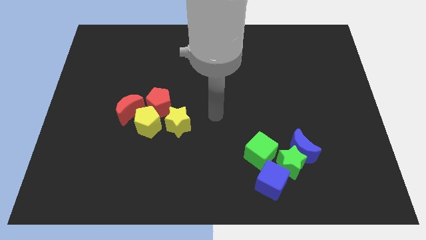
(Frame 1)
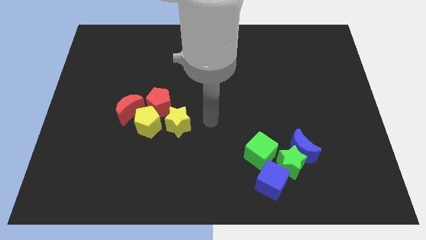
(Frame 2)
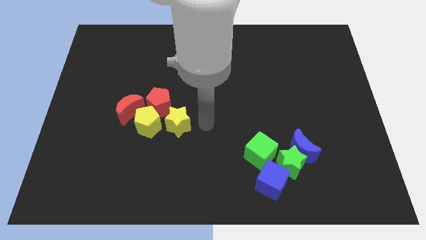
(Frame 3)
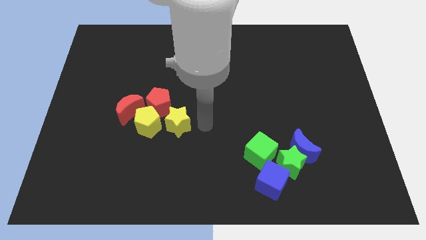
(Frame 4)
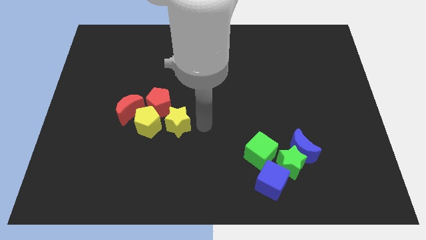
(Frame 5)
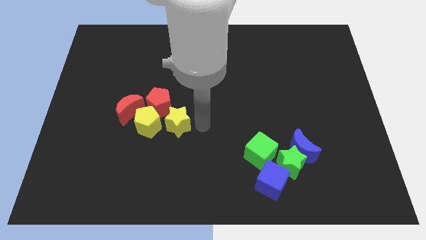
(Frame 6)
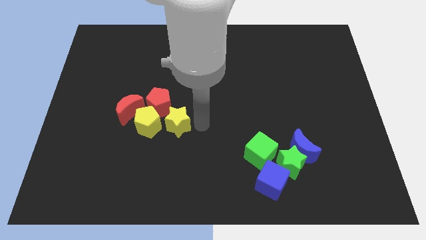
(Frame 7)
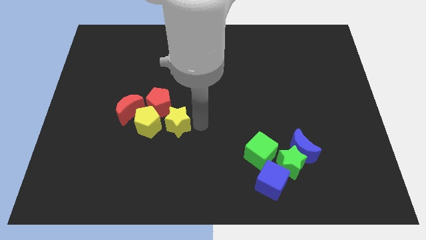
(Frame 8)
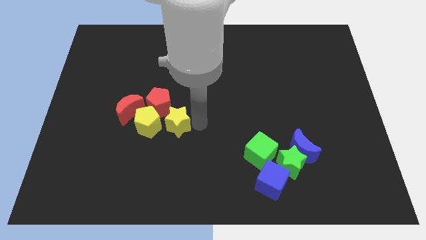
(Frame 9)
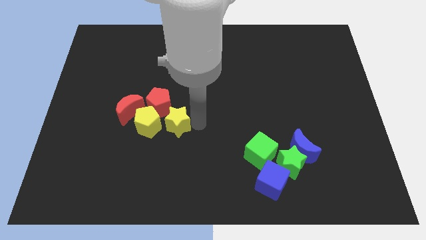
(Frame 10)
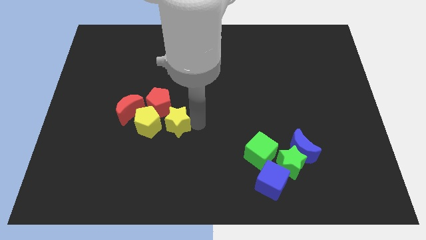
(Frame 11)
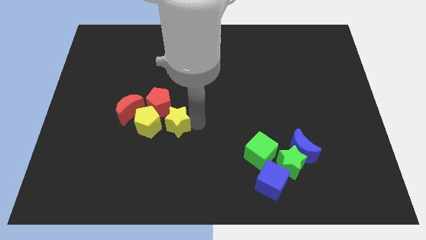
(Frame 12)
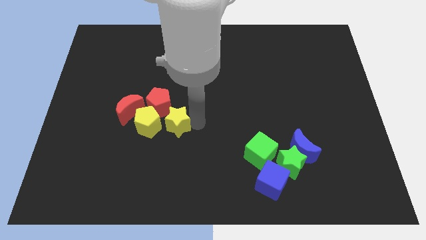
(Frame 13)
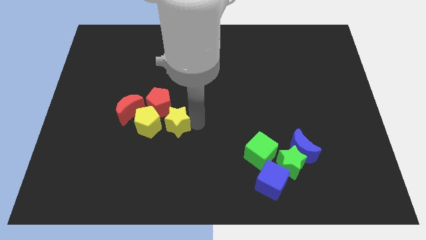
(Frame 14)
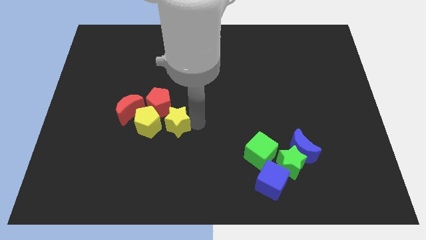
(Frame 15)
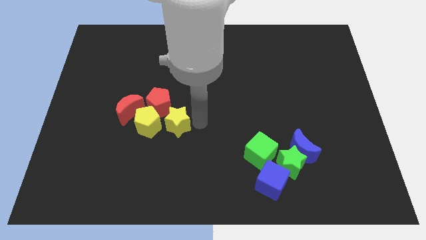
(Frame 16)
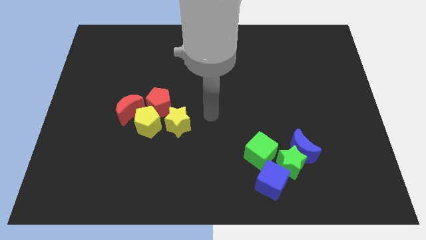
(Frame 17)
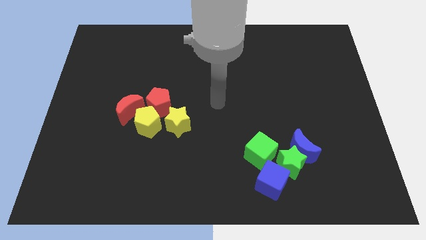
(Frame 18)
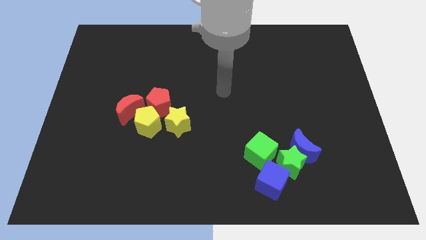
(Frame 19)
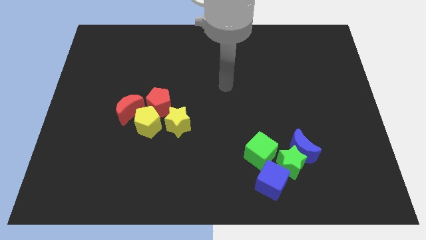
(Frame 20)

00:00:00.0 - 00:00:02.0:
move the arm away from the yellow star

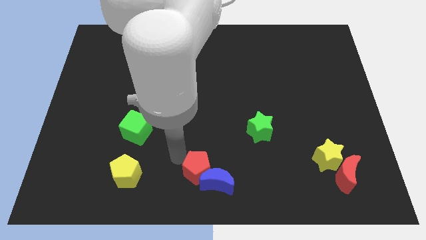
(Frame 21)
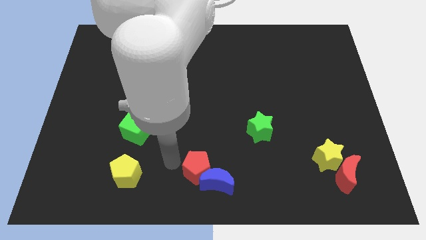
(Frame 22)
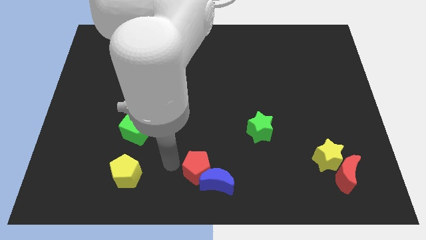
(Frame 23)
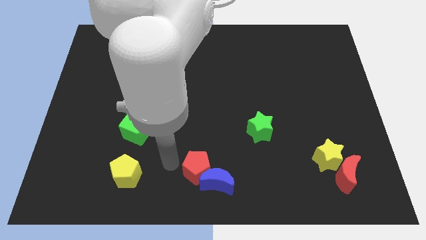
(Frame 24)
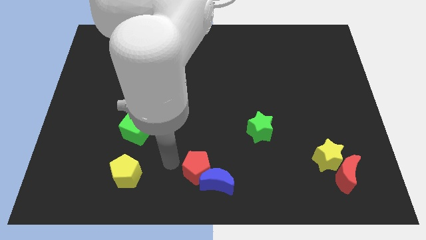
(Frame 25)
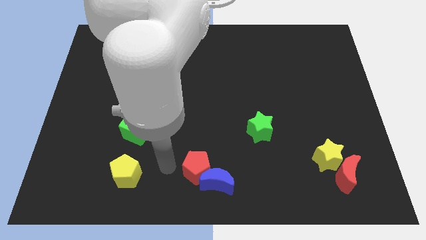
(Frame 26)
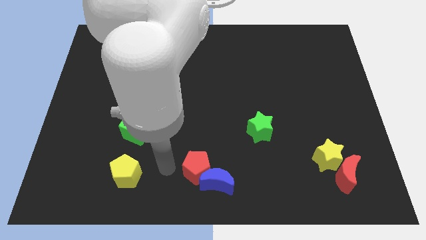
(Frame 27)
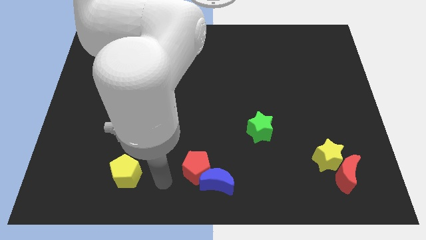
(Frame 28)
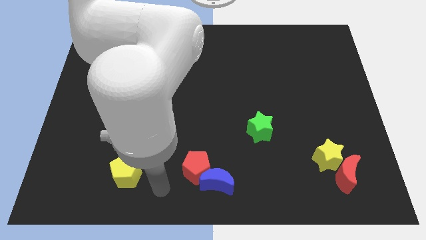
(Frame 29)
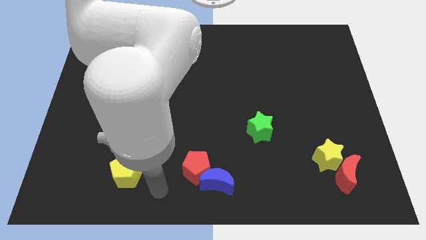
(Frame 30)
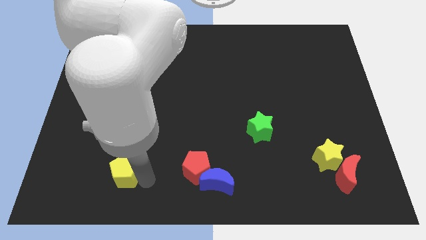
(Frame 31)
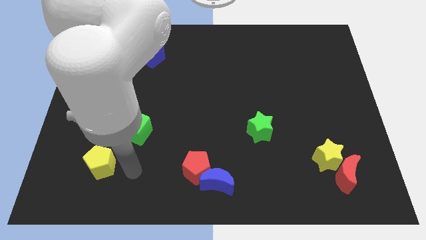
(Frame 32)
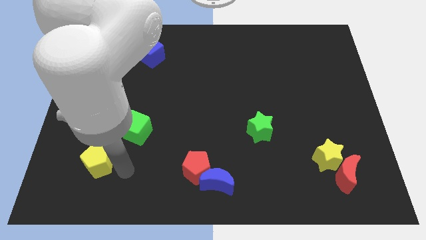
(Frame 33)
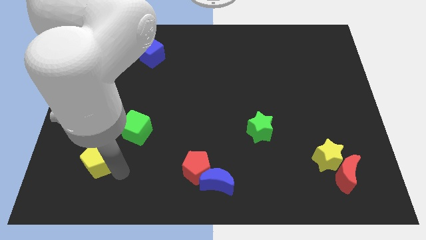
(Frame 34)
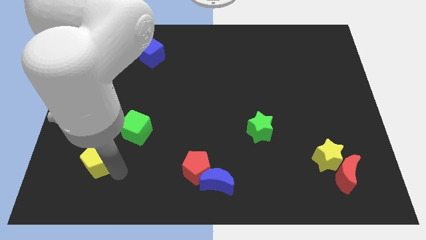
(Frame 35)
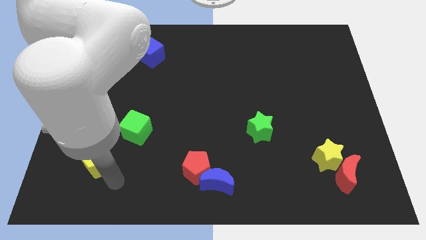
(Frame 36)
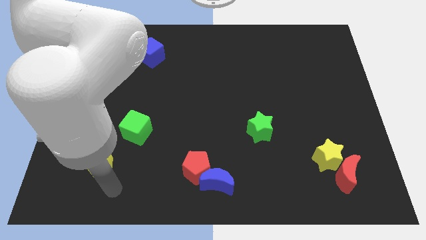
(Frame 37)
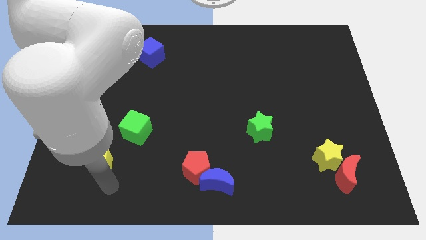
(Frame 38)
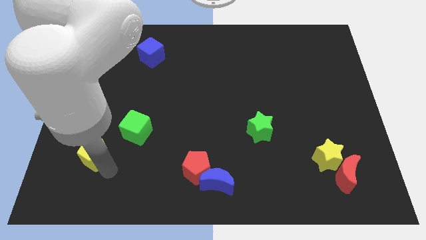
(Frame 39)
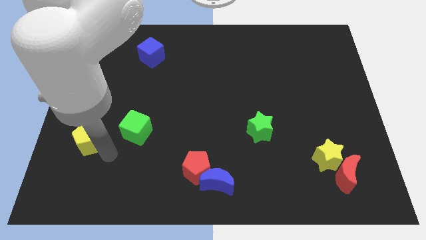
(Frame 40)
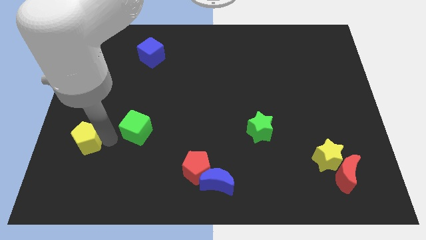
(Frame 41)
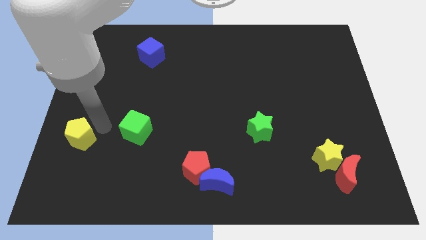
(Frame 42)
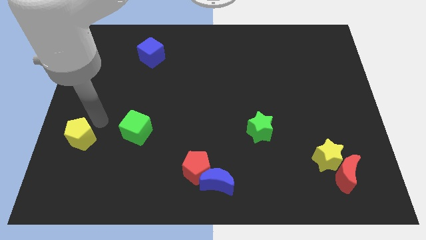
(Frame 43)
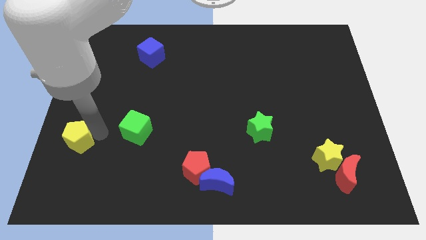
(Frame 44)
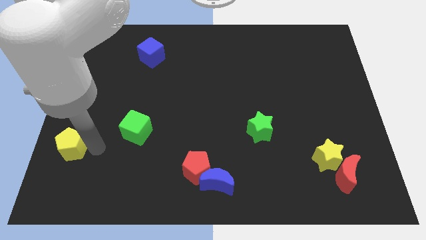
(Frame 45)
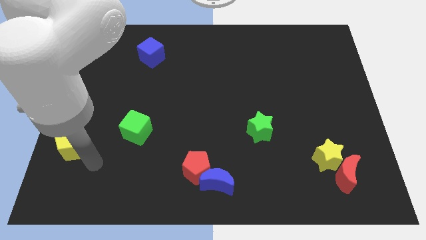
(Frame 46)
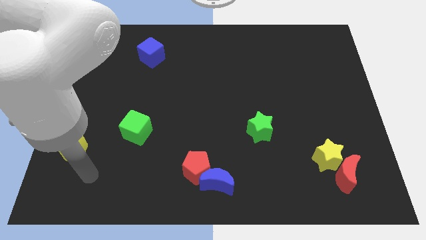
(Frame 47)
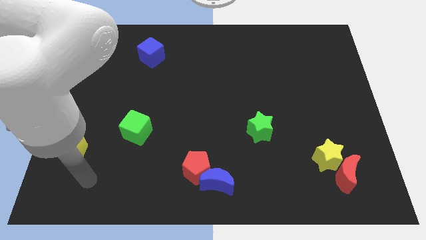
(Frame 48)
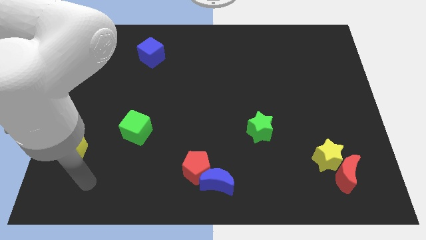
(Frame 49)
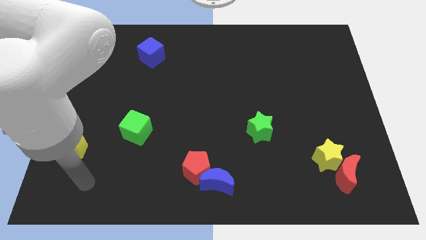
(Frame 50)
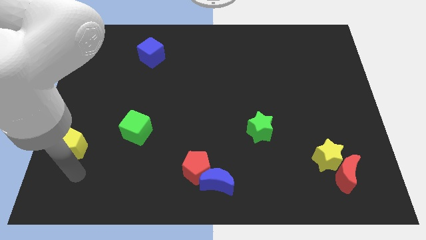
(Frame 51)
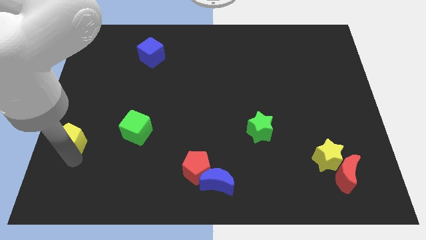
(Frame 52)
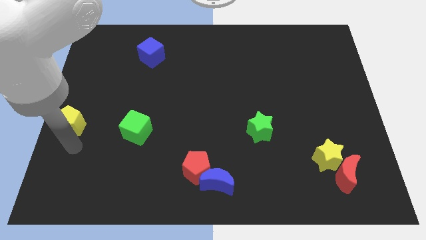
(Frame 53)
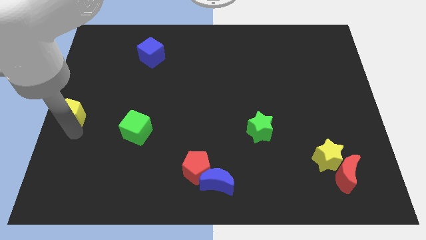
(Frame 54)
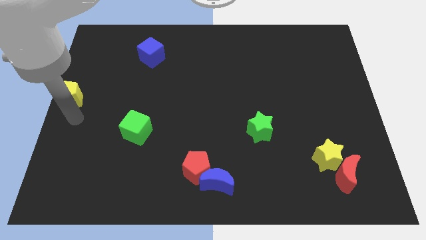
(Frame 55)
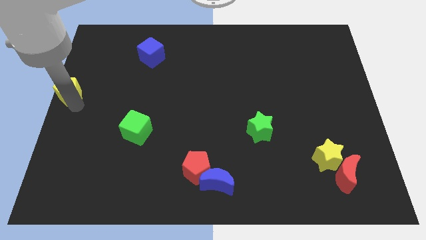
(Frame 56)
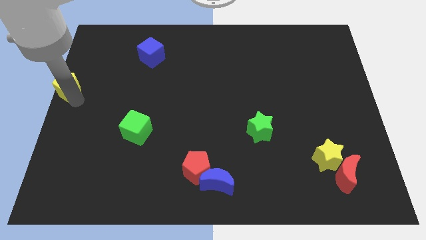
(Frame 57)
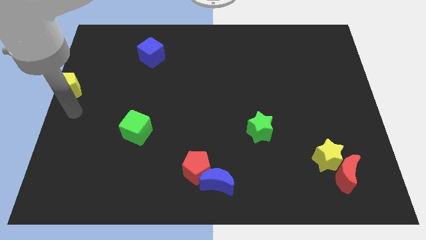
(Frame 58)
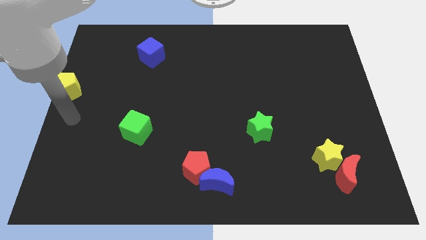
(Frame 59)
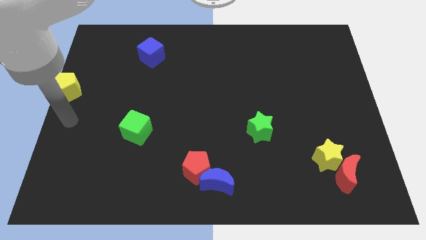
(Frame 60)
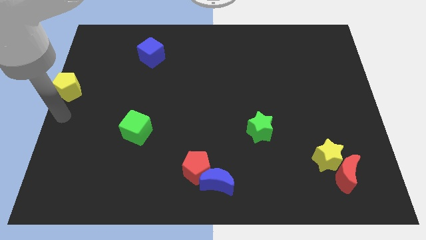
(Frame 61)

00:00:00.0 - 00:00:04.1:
place yellow pentagon in the center left

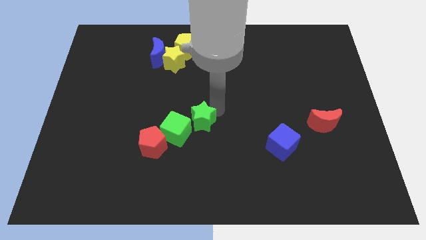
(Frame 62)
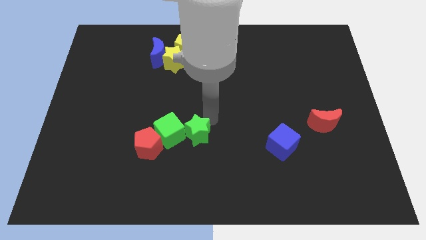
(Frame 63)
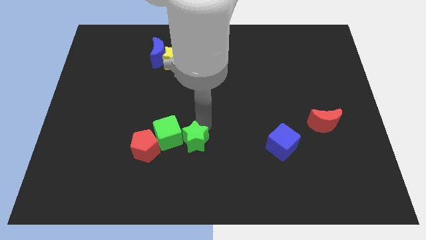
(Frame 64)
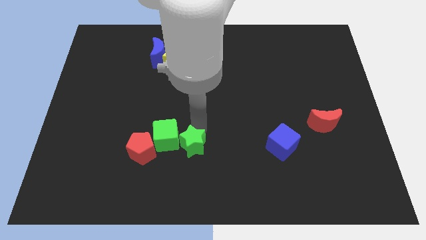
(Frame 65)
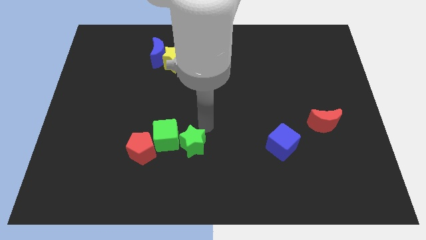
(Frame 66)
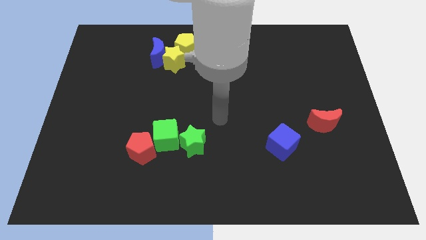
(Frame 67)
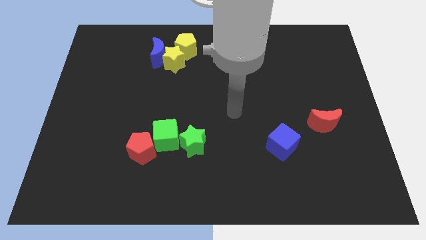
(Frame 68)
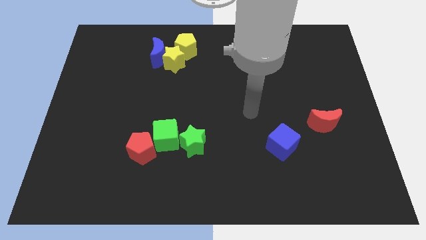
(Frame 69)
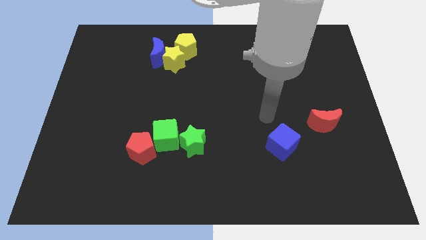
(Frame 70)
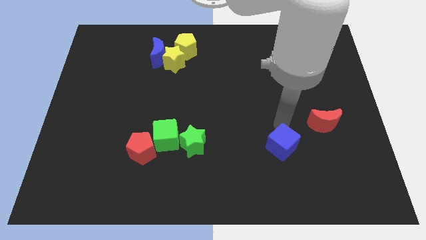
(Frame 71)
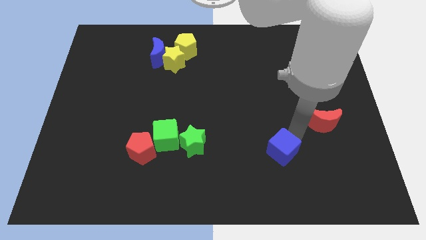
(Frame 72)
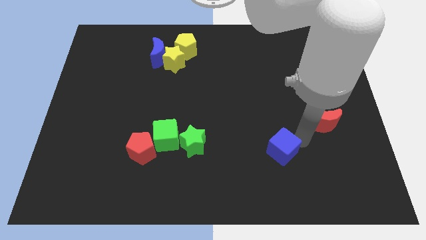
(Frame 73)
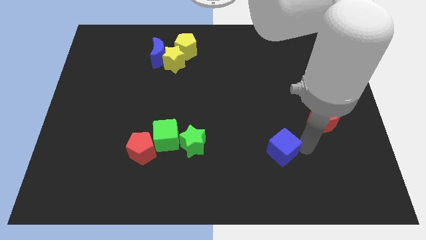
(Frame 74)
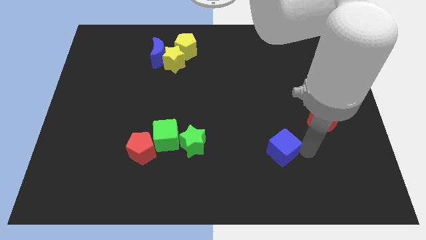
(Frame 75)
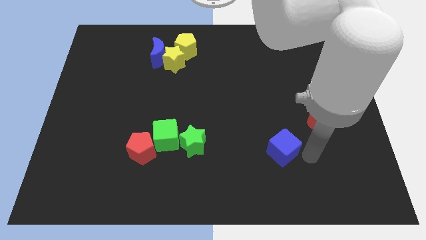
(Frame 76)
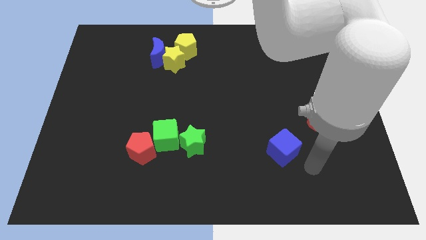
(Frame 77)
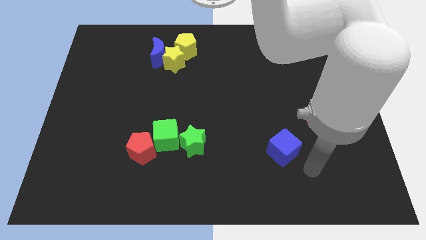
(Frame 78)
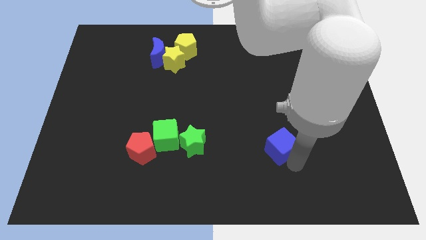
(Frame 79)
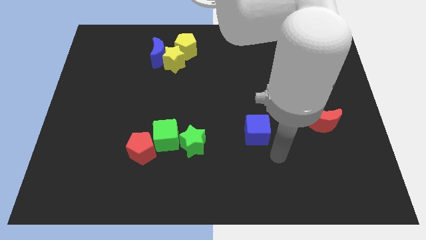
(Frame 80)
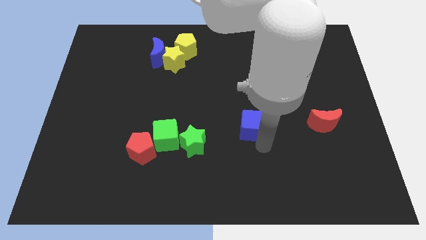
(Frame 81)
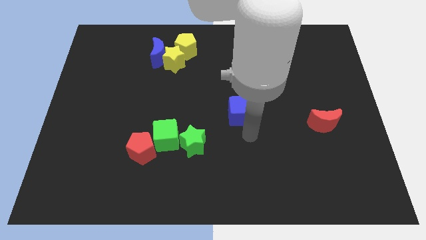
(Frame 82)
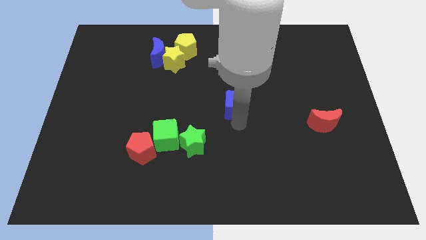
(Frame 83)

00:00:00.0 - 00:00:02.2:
slide the blue cube towards the center

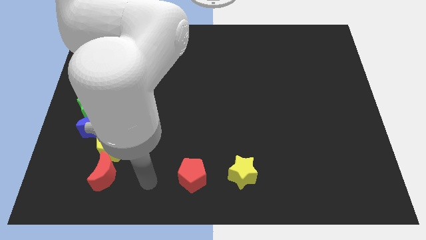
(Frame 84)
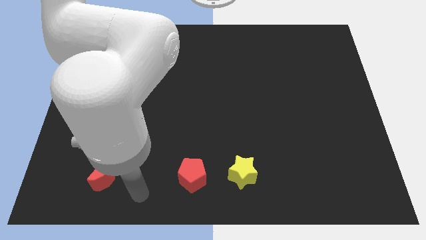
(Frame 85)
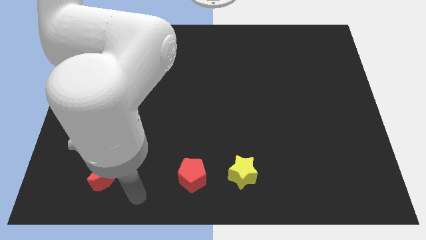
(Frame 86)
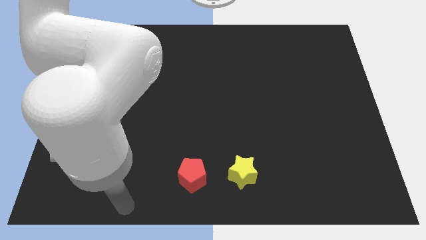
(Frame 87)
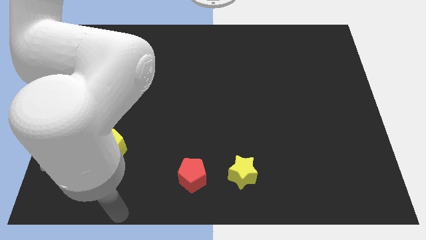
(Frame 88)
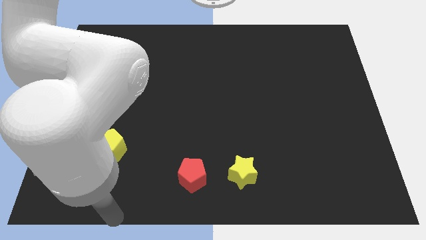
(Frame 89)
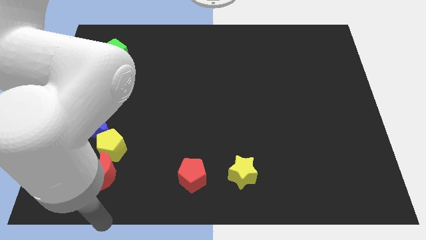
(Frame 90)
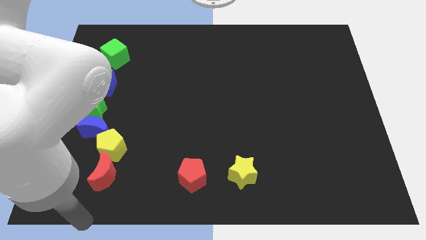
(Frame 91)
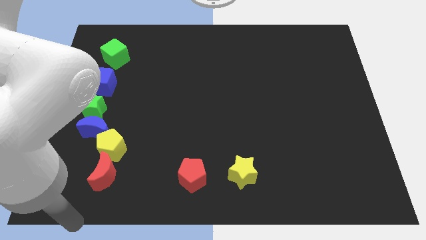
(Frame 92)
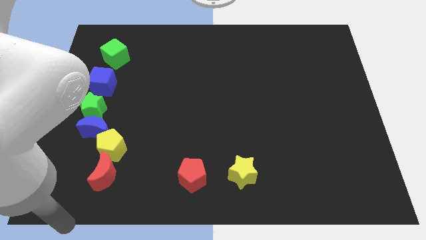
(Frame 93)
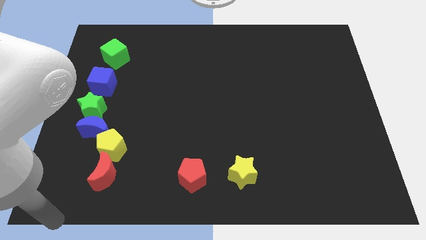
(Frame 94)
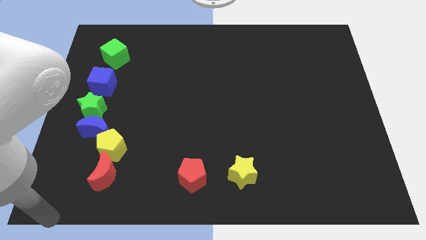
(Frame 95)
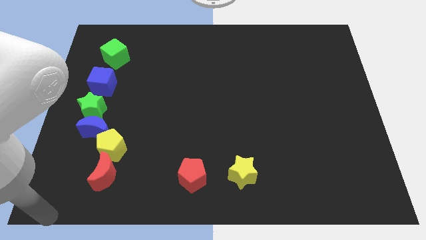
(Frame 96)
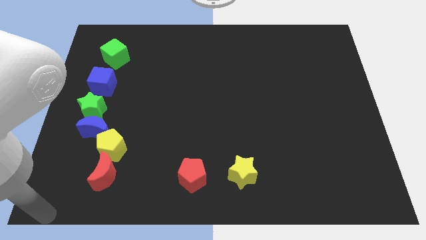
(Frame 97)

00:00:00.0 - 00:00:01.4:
drag your hand towards the bottom left corner of the board
